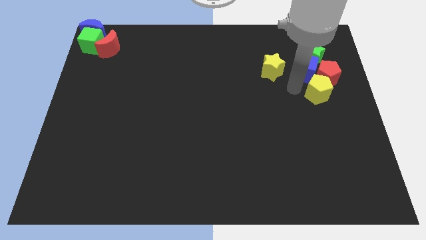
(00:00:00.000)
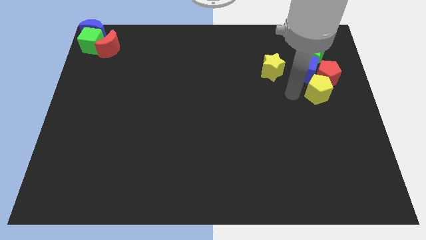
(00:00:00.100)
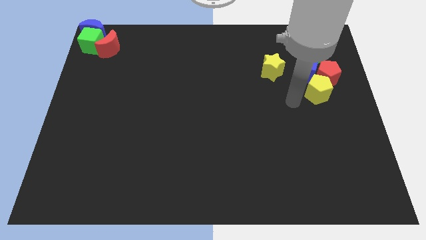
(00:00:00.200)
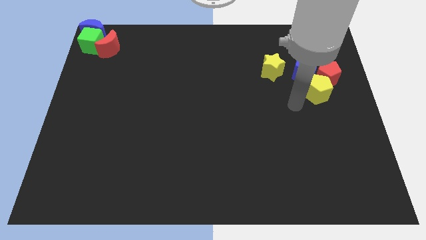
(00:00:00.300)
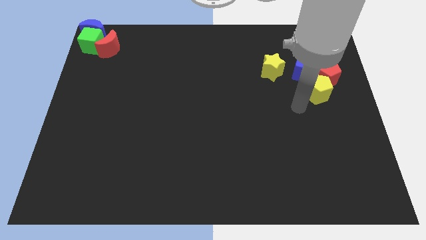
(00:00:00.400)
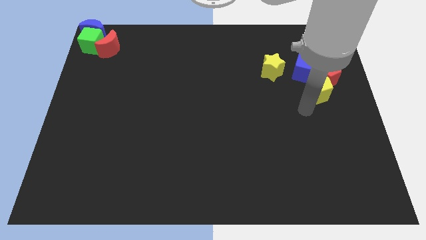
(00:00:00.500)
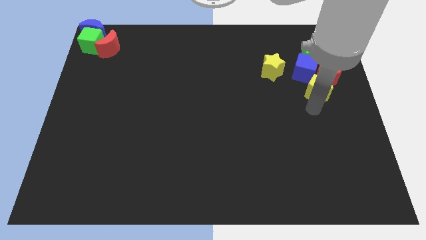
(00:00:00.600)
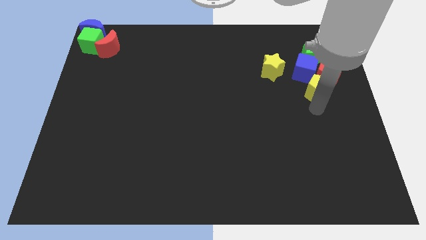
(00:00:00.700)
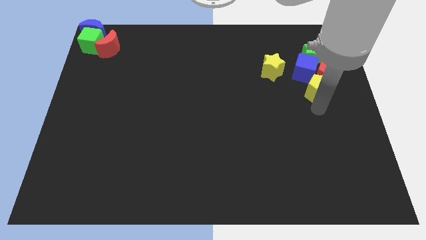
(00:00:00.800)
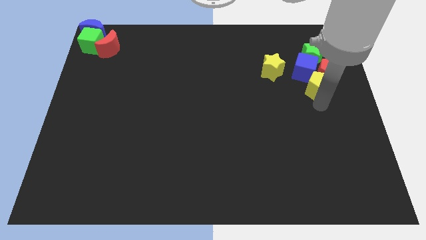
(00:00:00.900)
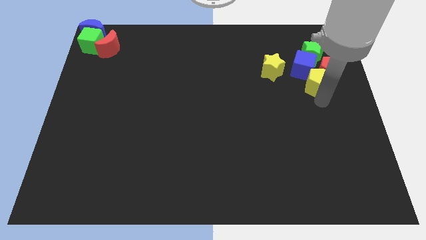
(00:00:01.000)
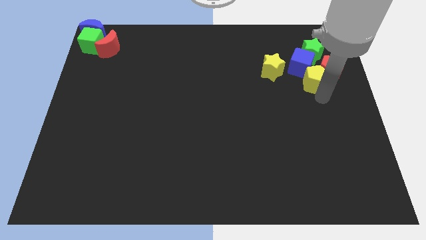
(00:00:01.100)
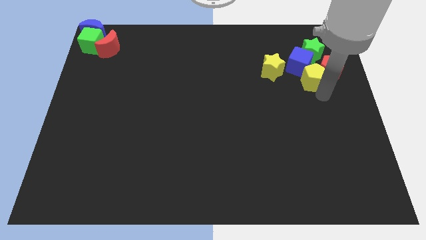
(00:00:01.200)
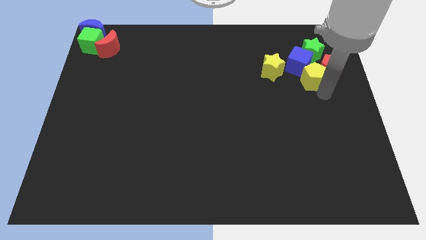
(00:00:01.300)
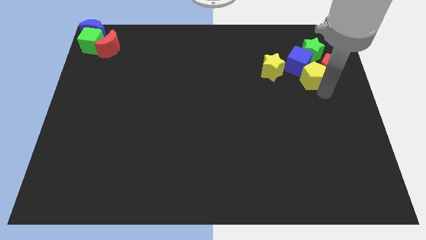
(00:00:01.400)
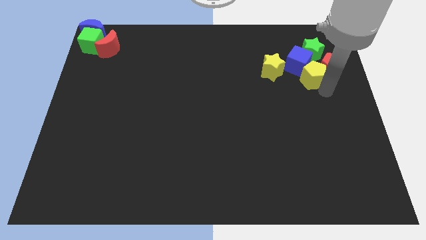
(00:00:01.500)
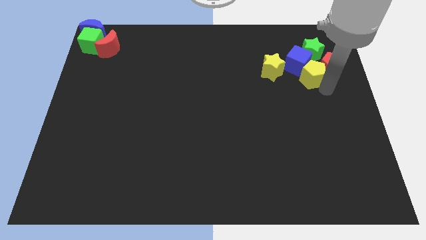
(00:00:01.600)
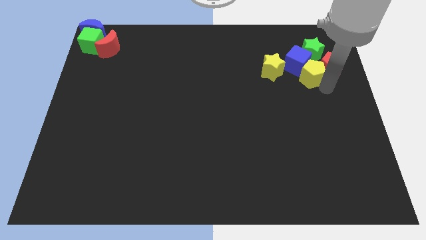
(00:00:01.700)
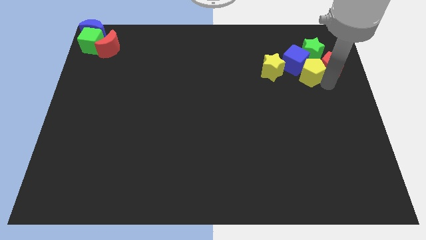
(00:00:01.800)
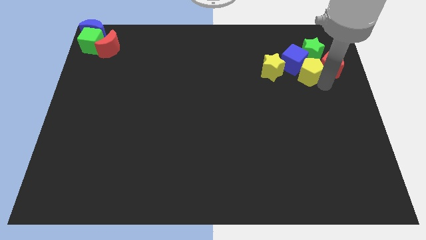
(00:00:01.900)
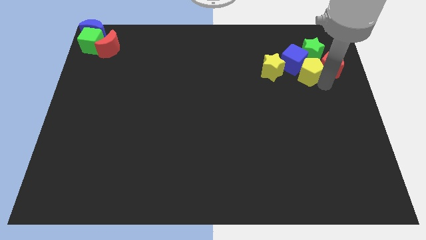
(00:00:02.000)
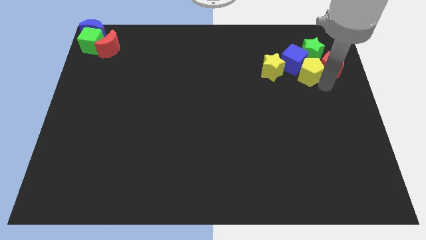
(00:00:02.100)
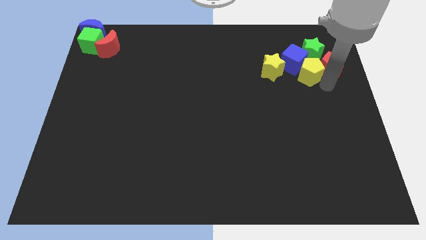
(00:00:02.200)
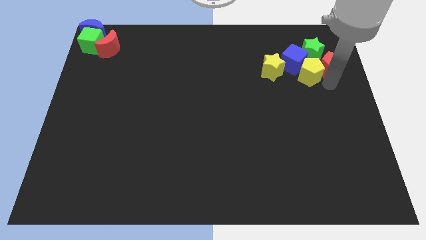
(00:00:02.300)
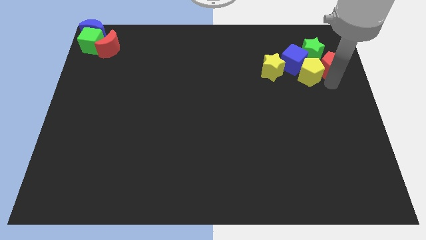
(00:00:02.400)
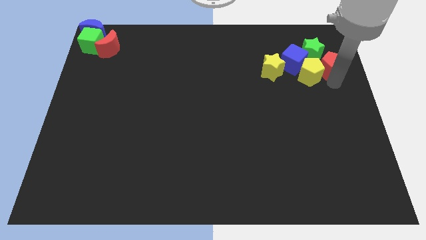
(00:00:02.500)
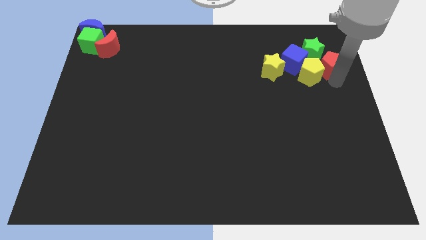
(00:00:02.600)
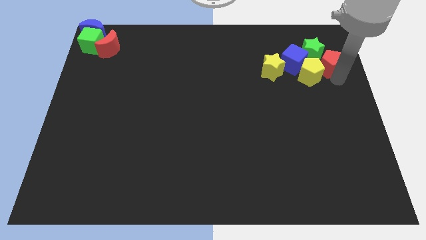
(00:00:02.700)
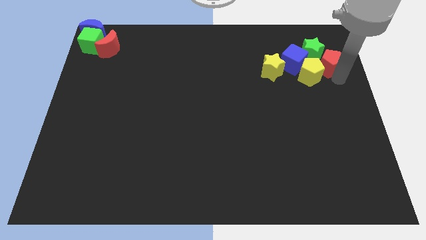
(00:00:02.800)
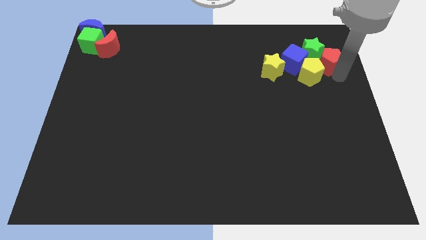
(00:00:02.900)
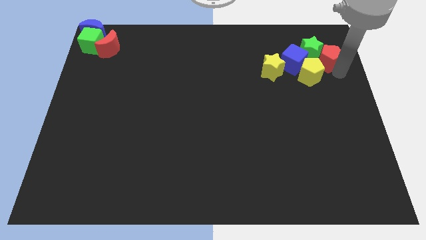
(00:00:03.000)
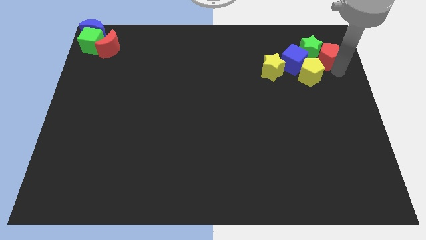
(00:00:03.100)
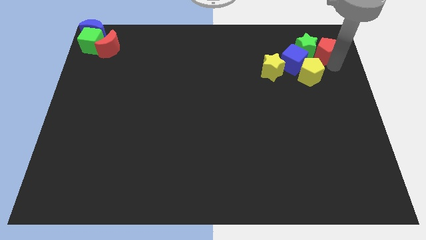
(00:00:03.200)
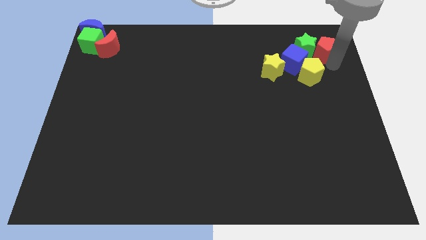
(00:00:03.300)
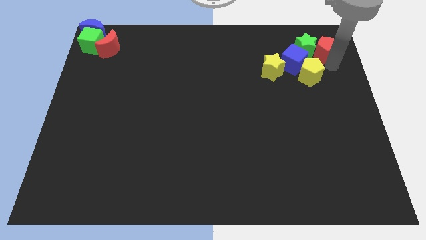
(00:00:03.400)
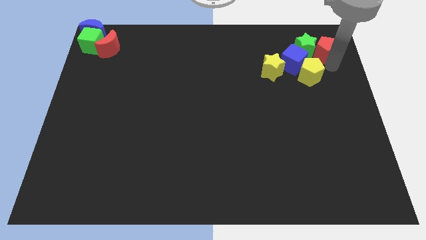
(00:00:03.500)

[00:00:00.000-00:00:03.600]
push the blue cube and green star and red pentagon slightly to the right of the yellow star

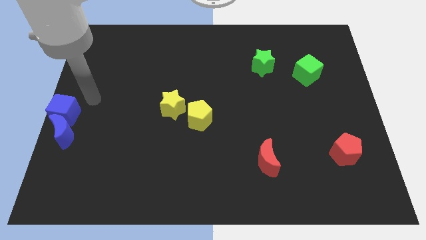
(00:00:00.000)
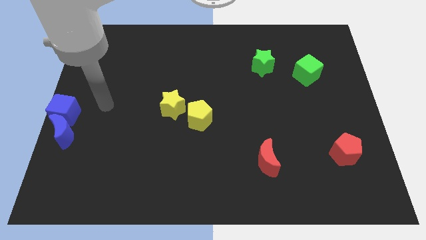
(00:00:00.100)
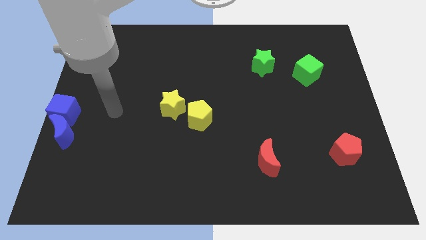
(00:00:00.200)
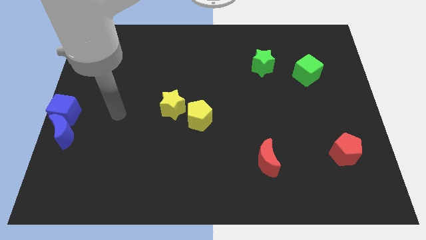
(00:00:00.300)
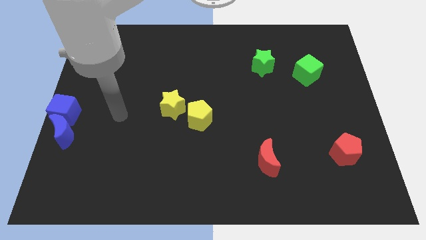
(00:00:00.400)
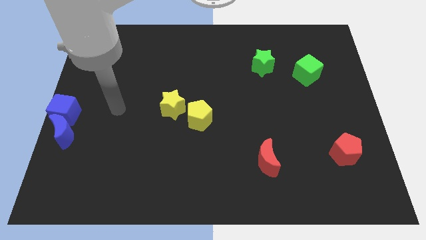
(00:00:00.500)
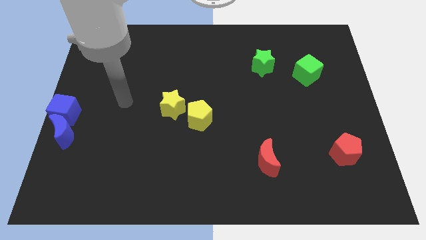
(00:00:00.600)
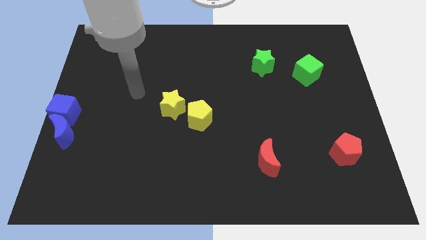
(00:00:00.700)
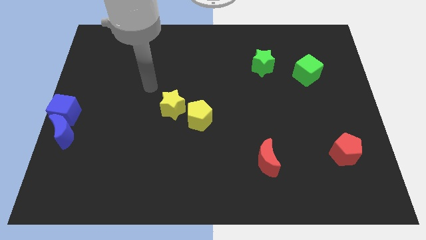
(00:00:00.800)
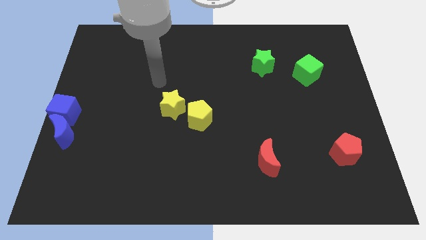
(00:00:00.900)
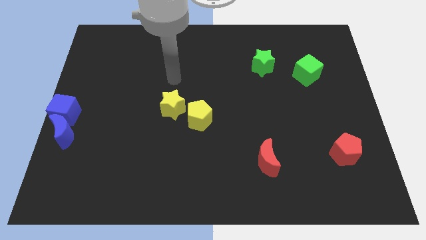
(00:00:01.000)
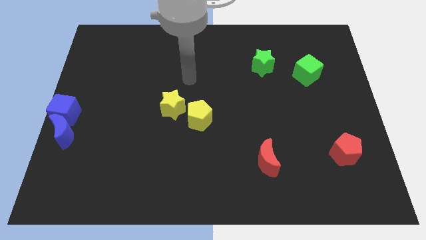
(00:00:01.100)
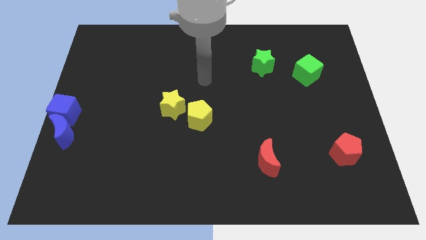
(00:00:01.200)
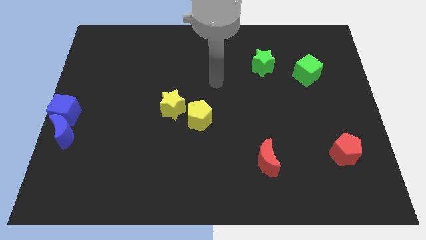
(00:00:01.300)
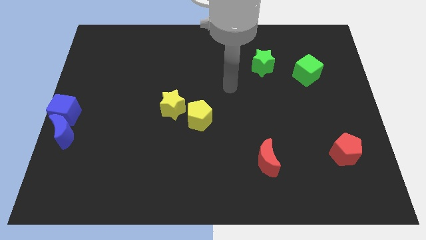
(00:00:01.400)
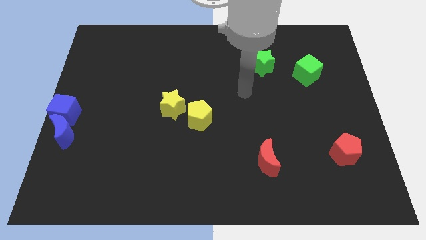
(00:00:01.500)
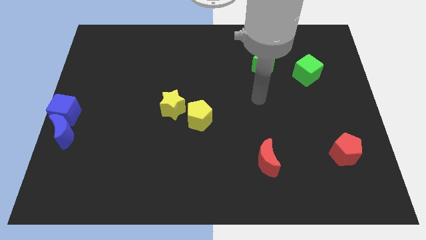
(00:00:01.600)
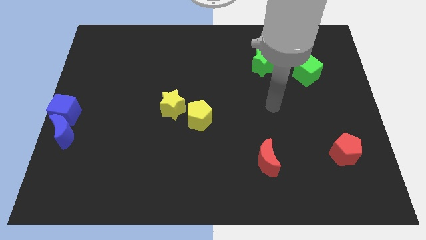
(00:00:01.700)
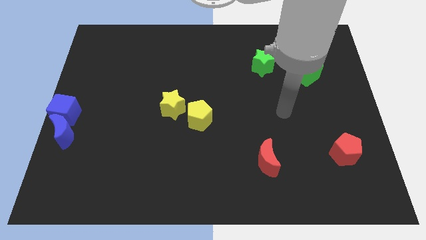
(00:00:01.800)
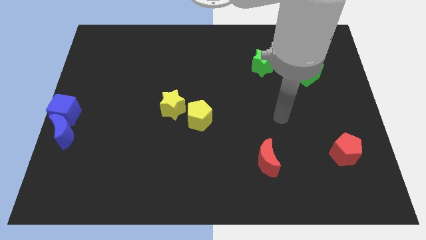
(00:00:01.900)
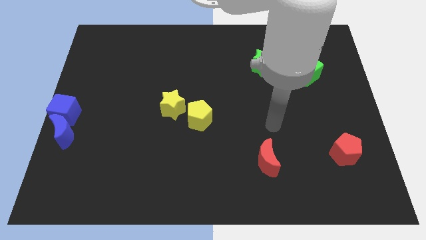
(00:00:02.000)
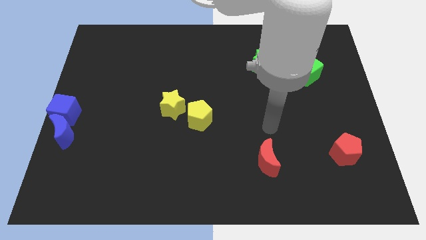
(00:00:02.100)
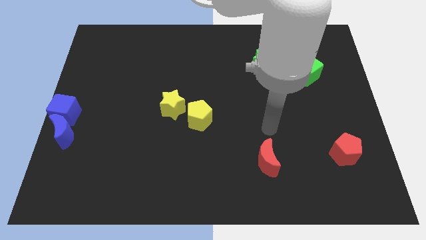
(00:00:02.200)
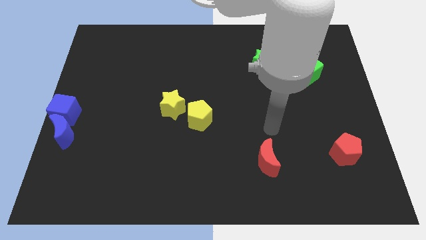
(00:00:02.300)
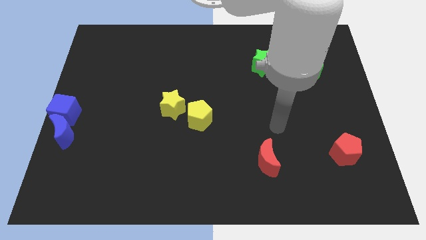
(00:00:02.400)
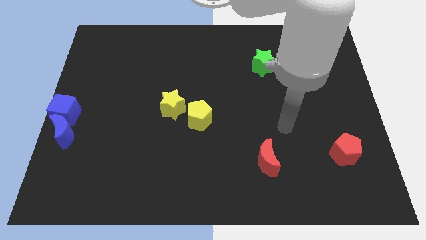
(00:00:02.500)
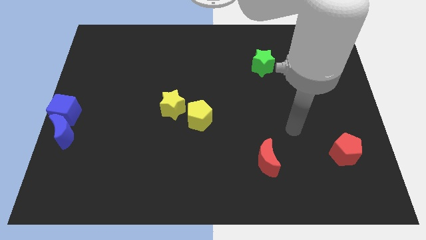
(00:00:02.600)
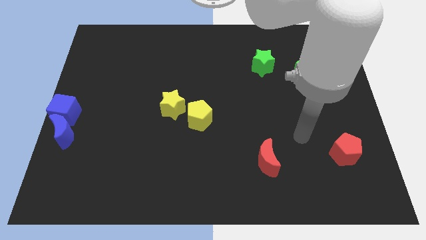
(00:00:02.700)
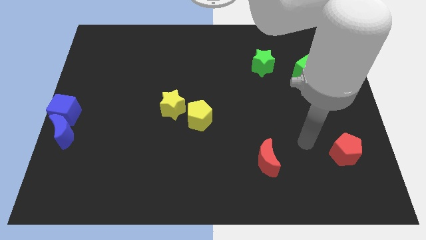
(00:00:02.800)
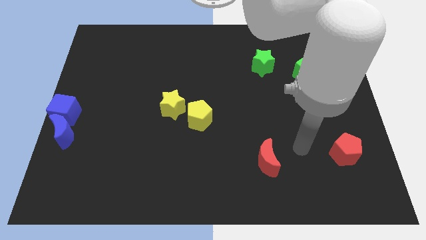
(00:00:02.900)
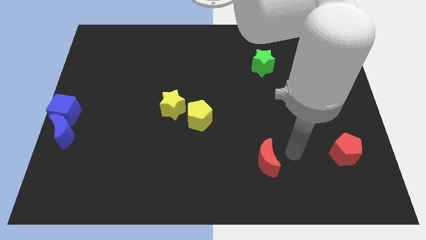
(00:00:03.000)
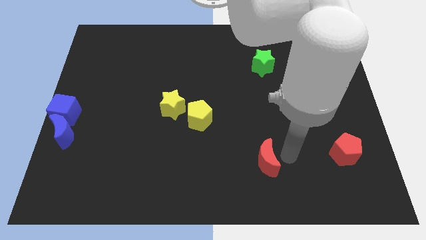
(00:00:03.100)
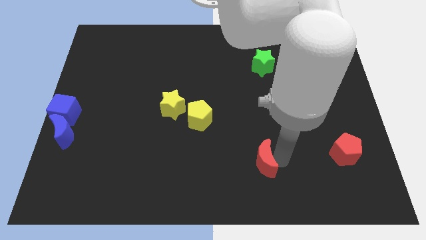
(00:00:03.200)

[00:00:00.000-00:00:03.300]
point your arm at the right side of the red crescent

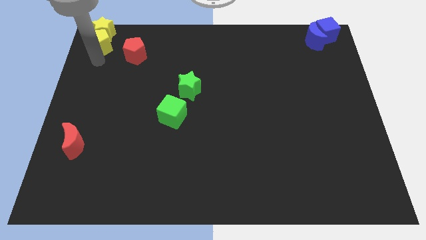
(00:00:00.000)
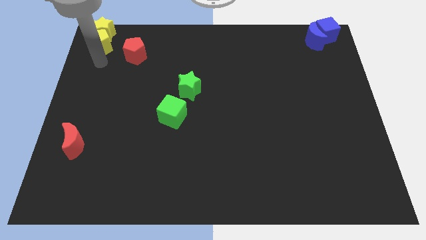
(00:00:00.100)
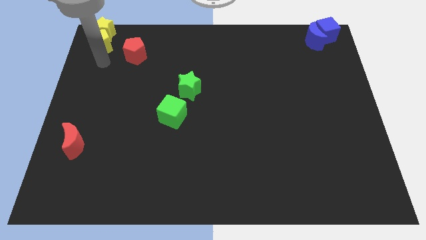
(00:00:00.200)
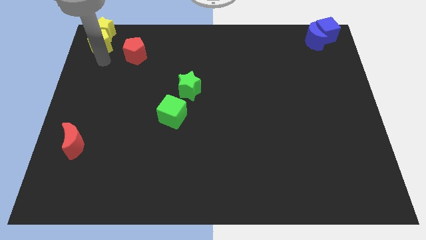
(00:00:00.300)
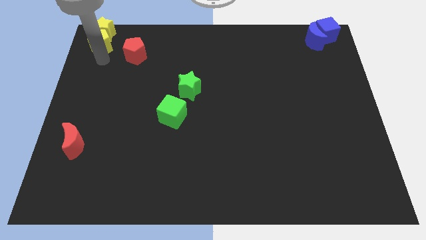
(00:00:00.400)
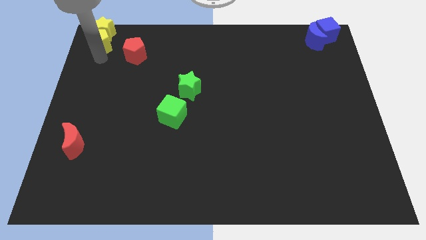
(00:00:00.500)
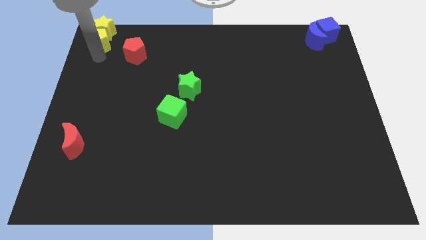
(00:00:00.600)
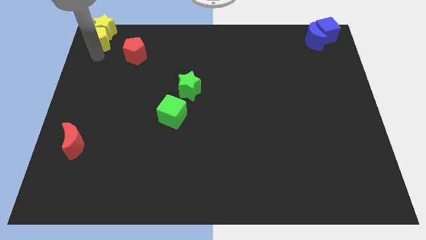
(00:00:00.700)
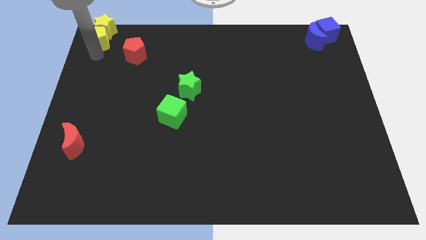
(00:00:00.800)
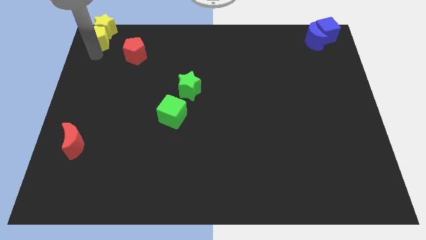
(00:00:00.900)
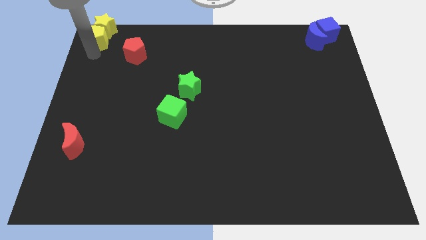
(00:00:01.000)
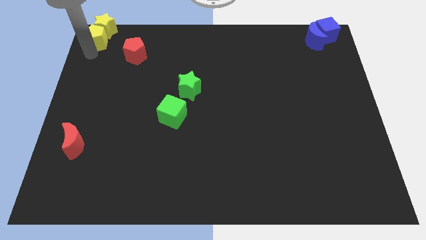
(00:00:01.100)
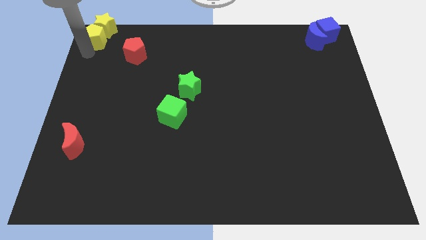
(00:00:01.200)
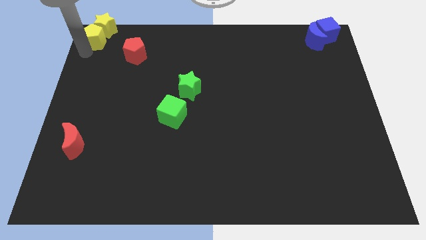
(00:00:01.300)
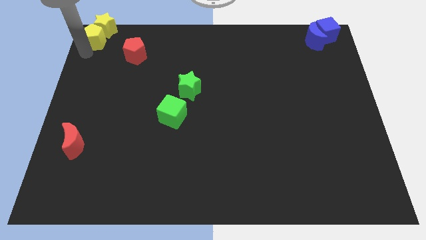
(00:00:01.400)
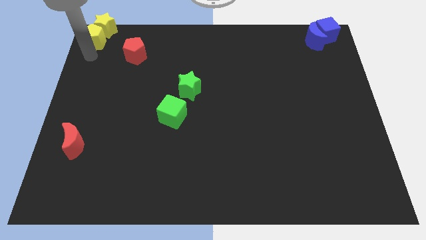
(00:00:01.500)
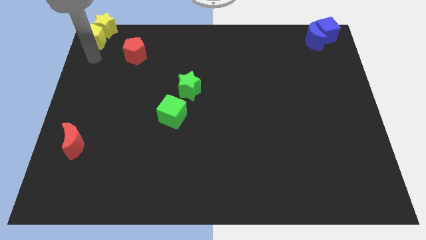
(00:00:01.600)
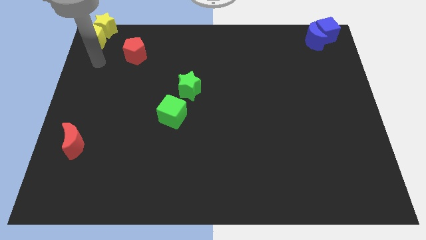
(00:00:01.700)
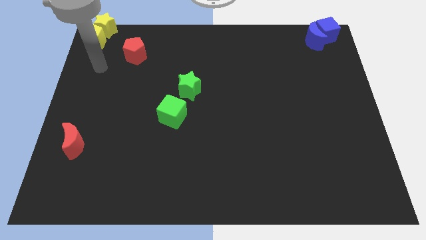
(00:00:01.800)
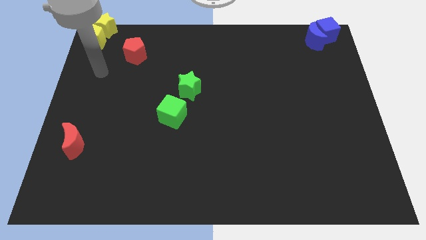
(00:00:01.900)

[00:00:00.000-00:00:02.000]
move the yellow star and yellow pentagon to the top left corner
